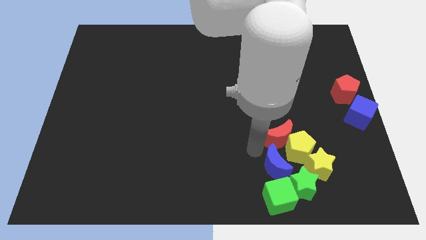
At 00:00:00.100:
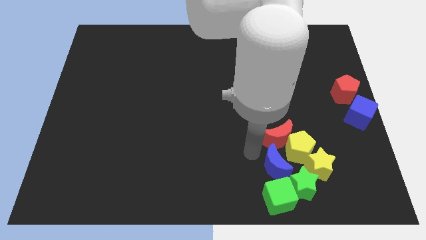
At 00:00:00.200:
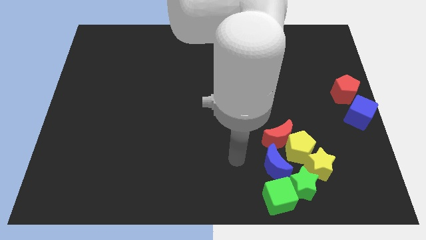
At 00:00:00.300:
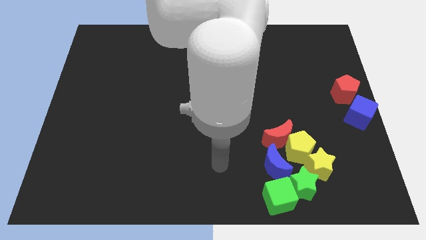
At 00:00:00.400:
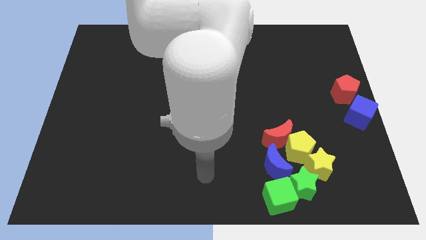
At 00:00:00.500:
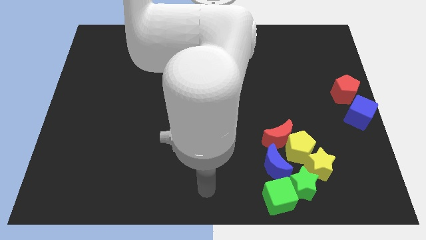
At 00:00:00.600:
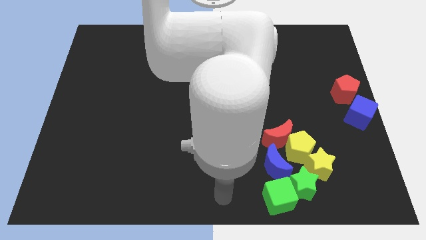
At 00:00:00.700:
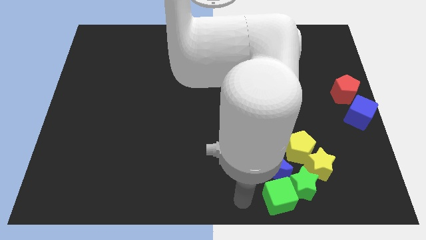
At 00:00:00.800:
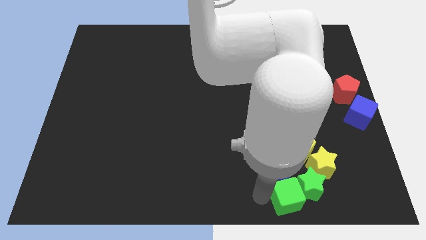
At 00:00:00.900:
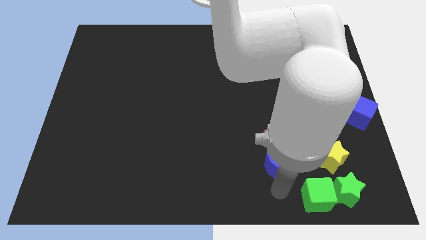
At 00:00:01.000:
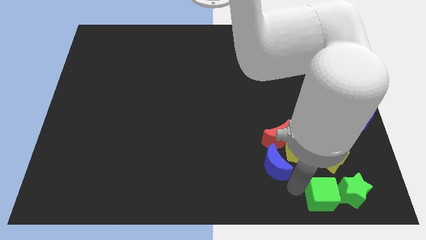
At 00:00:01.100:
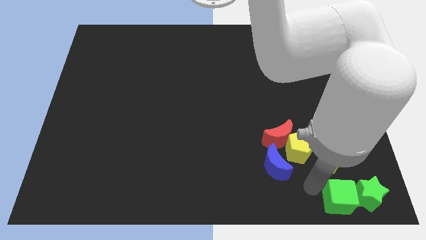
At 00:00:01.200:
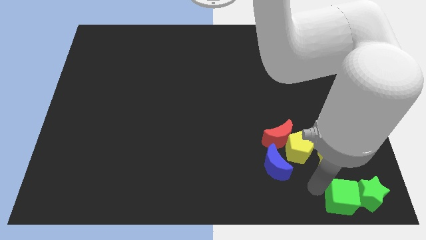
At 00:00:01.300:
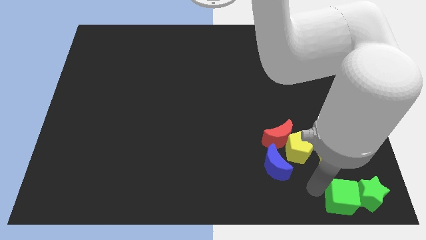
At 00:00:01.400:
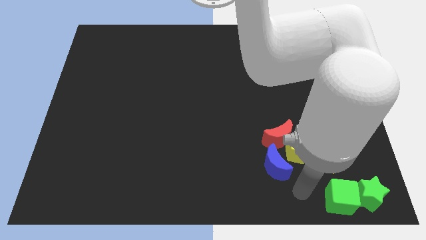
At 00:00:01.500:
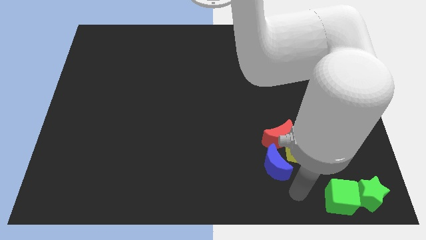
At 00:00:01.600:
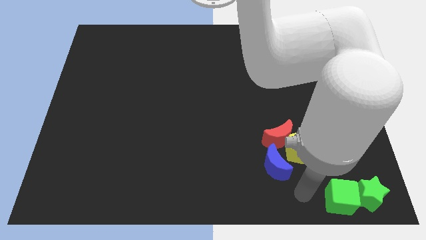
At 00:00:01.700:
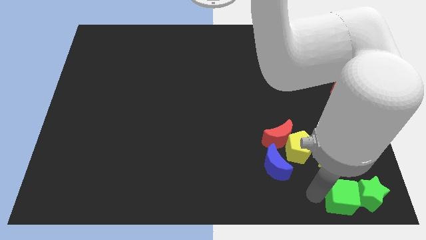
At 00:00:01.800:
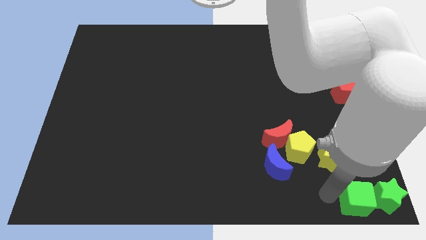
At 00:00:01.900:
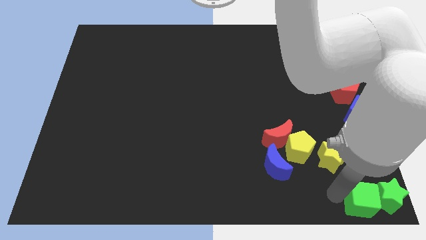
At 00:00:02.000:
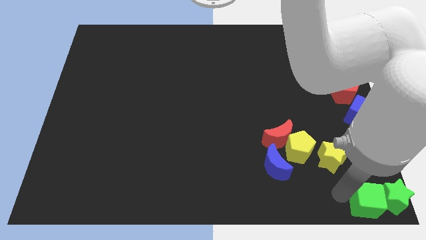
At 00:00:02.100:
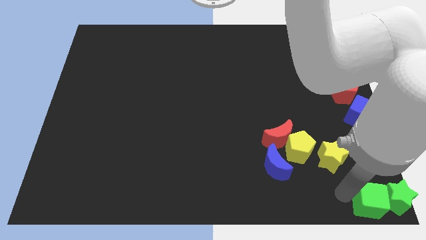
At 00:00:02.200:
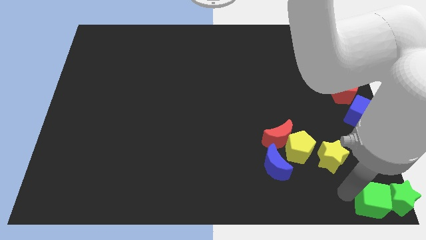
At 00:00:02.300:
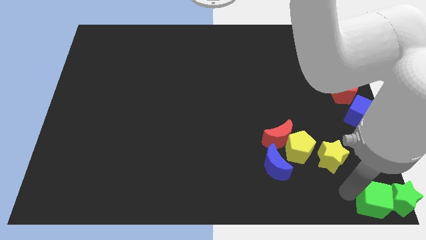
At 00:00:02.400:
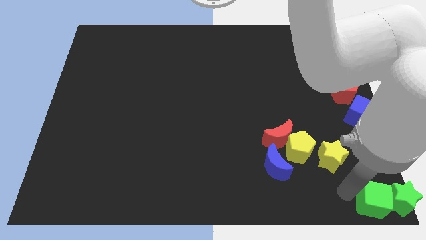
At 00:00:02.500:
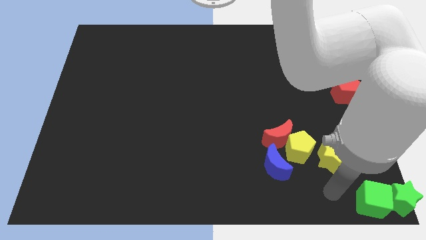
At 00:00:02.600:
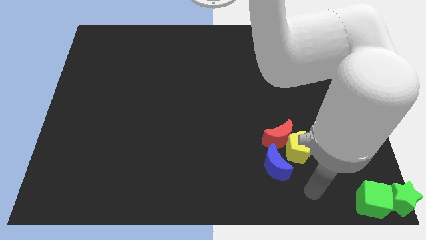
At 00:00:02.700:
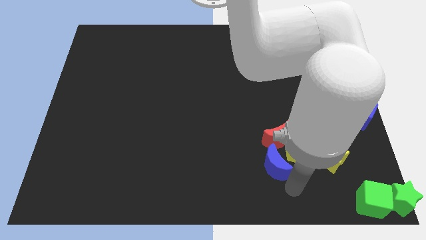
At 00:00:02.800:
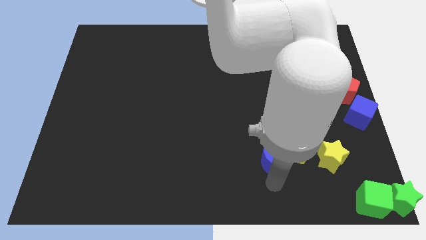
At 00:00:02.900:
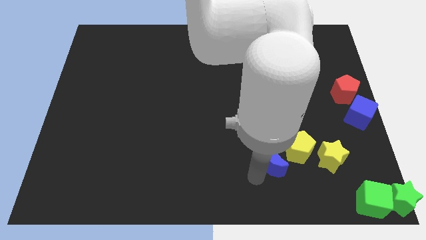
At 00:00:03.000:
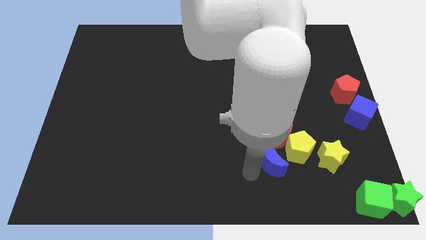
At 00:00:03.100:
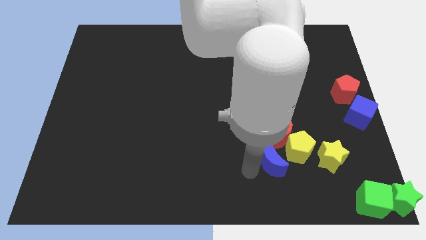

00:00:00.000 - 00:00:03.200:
place both the green blocks at the bottom right corner of the board

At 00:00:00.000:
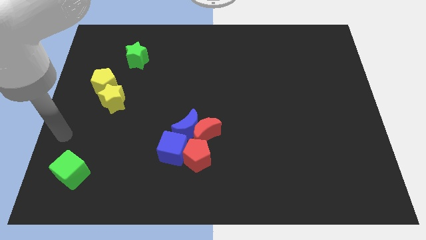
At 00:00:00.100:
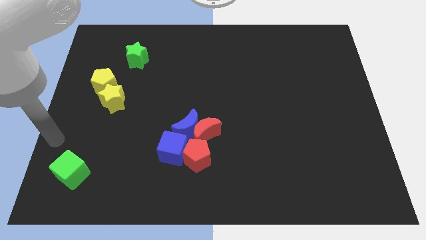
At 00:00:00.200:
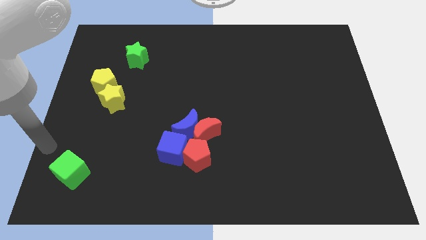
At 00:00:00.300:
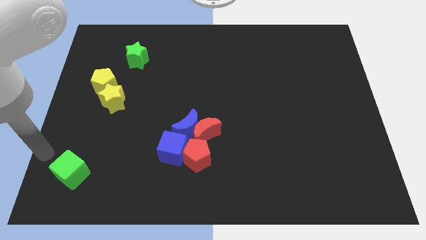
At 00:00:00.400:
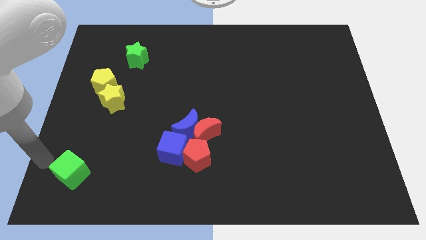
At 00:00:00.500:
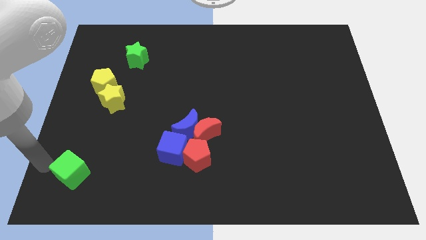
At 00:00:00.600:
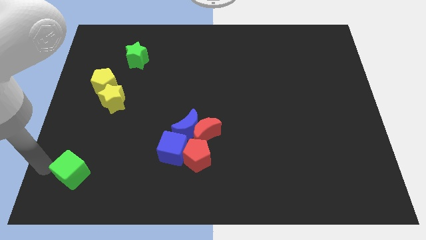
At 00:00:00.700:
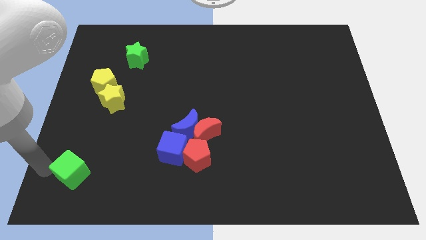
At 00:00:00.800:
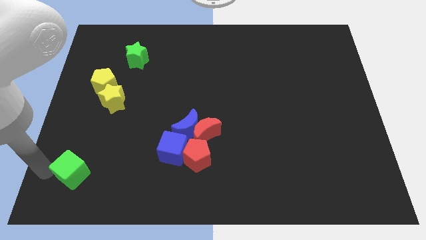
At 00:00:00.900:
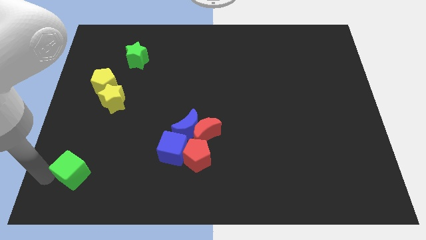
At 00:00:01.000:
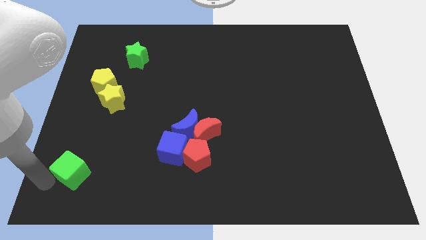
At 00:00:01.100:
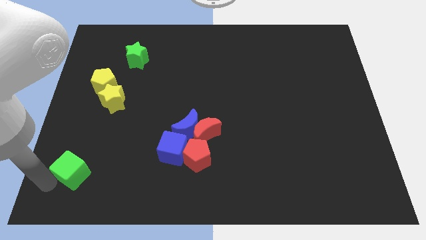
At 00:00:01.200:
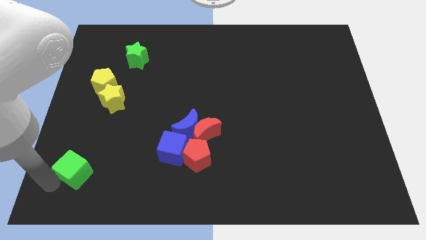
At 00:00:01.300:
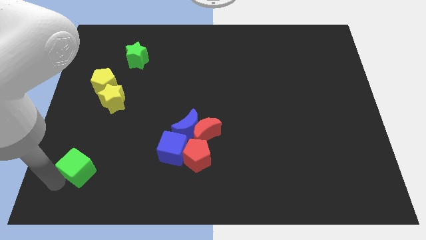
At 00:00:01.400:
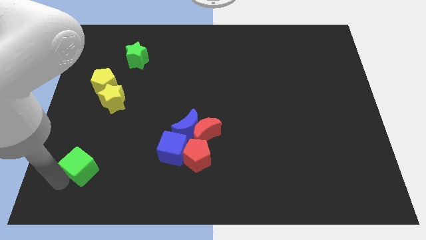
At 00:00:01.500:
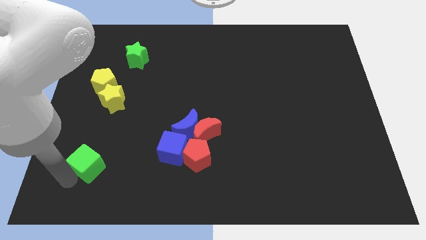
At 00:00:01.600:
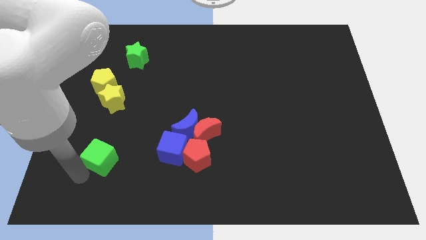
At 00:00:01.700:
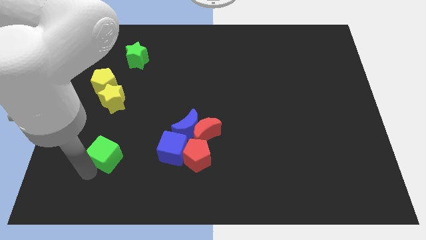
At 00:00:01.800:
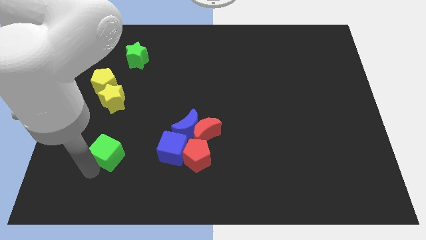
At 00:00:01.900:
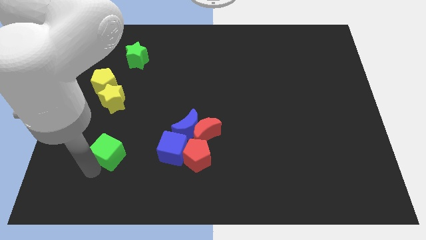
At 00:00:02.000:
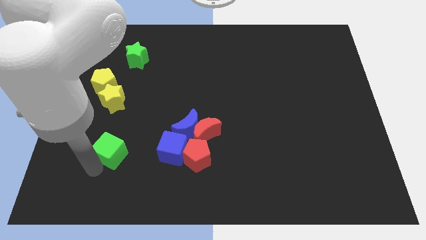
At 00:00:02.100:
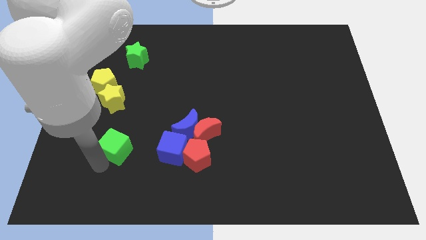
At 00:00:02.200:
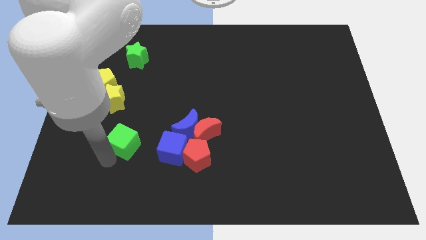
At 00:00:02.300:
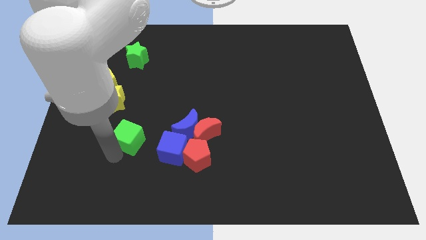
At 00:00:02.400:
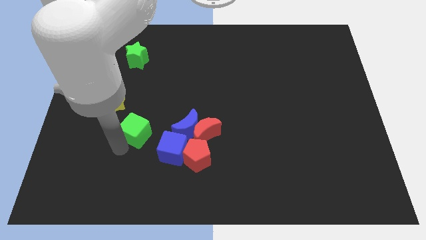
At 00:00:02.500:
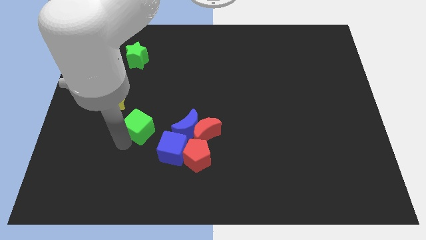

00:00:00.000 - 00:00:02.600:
push green cube in between yellow star and blue cube

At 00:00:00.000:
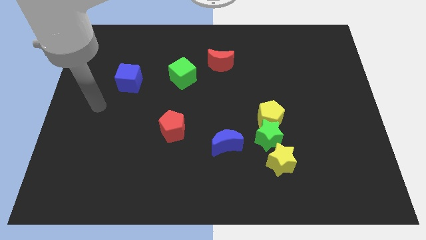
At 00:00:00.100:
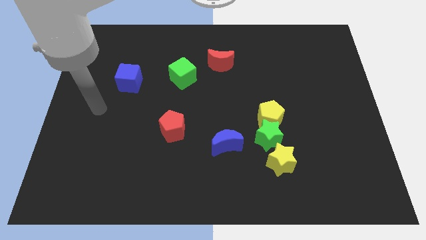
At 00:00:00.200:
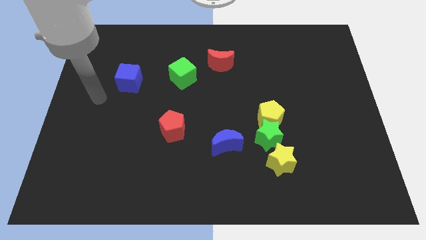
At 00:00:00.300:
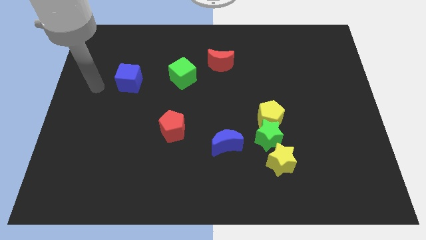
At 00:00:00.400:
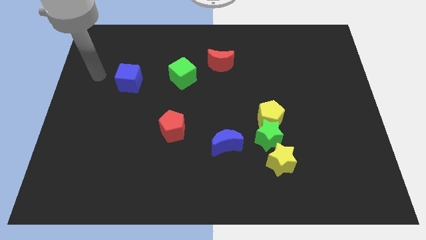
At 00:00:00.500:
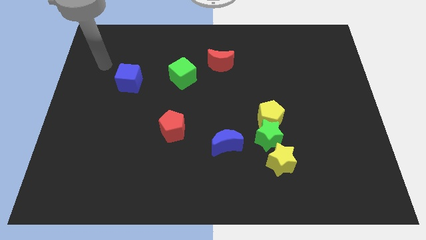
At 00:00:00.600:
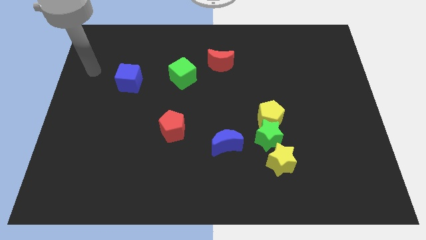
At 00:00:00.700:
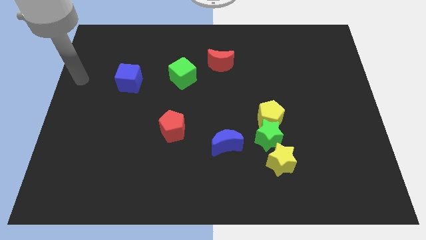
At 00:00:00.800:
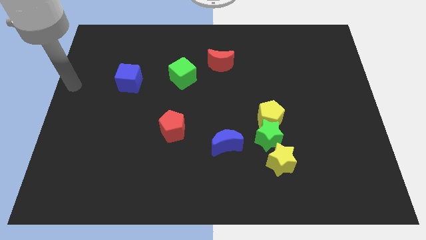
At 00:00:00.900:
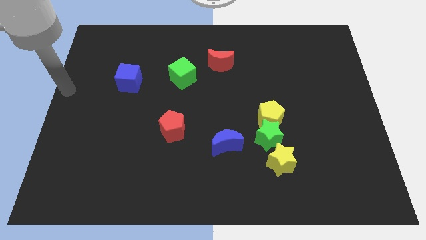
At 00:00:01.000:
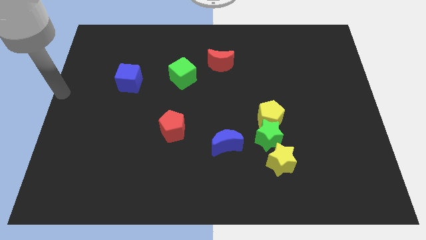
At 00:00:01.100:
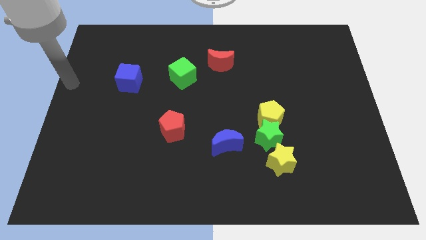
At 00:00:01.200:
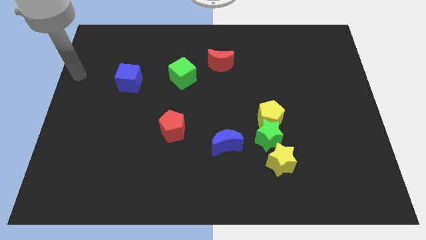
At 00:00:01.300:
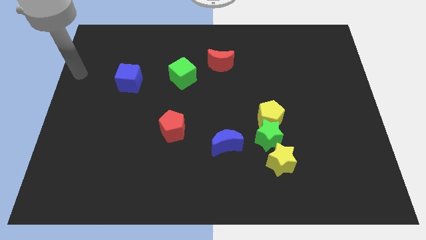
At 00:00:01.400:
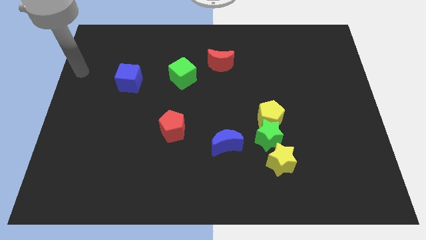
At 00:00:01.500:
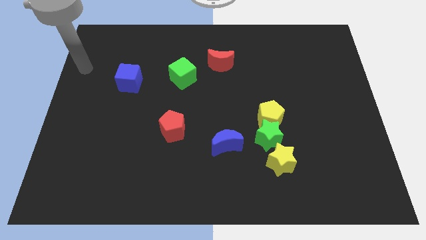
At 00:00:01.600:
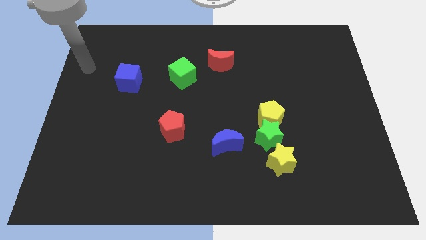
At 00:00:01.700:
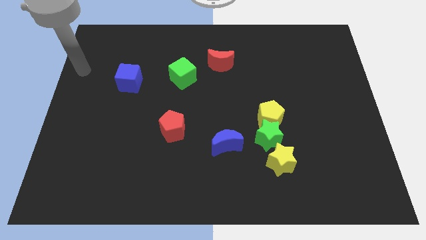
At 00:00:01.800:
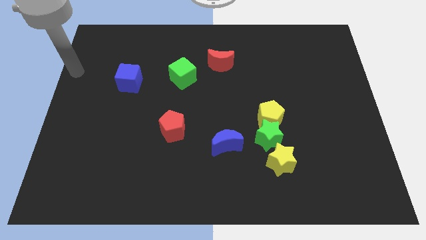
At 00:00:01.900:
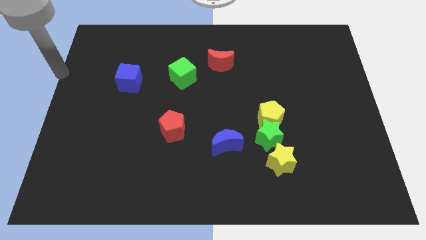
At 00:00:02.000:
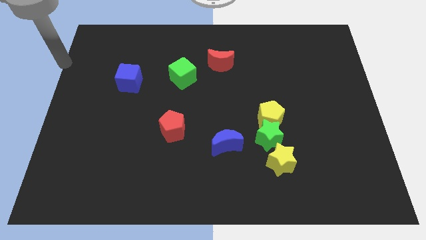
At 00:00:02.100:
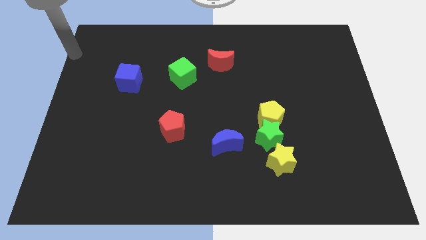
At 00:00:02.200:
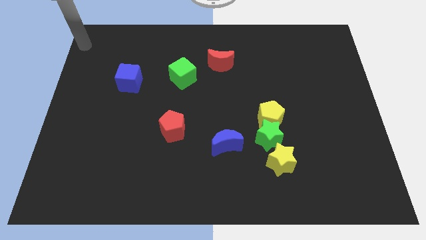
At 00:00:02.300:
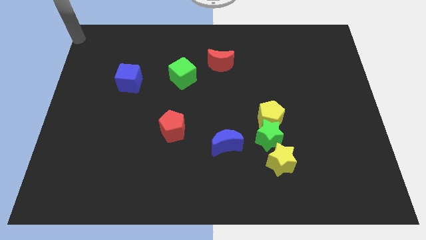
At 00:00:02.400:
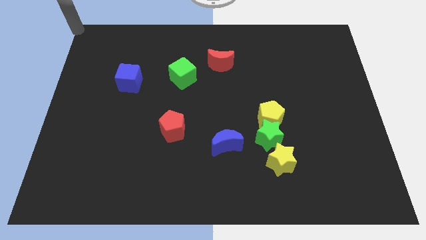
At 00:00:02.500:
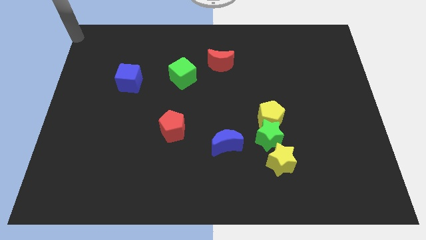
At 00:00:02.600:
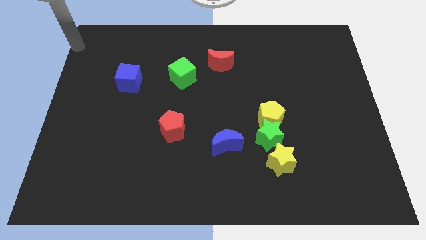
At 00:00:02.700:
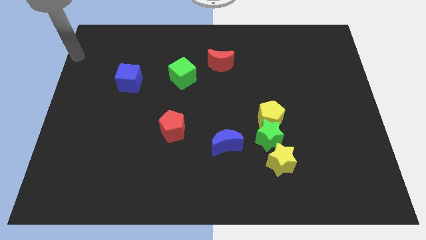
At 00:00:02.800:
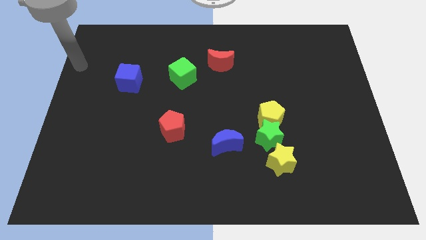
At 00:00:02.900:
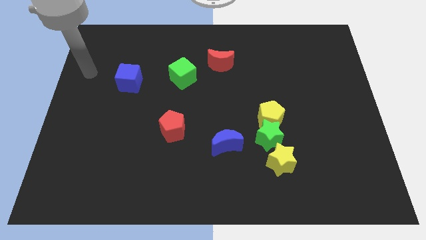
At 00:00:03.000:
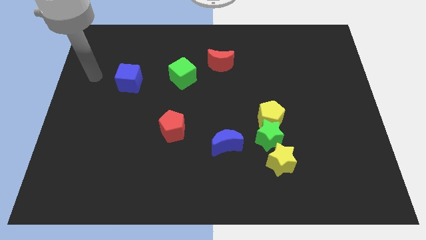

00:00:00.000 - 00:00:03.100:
move your arm near blue cube
